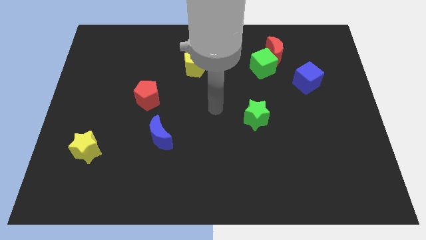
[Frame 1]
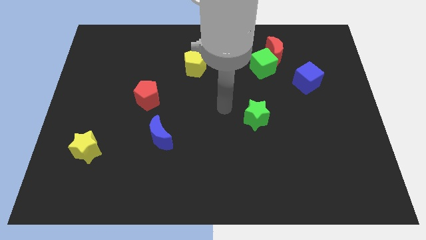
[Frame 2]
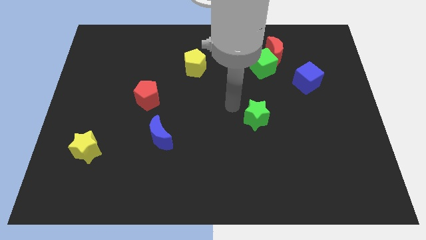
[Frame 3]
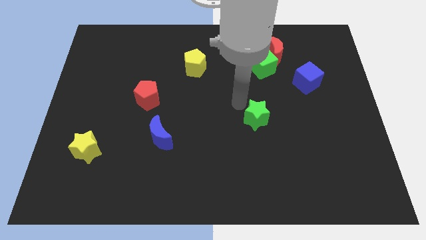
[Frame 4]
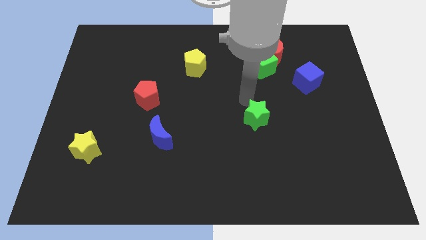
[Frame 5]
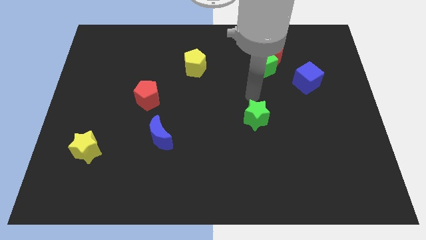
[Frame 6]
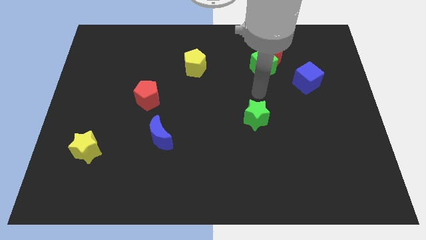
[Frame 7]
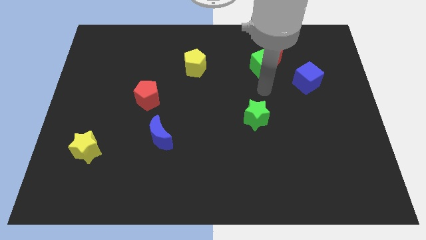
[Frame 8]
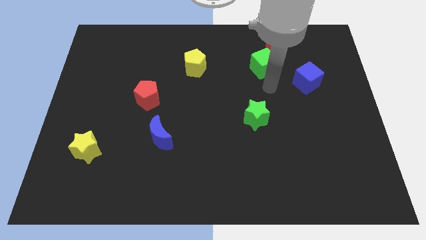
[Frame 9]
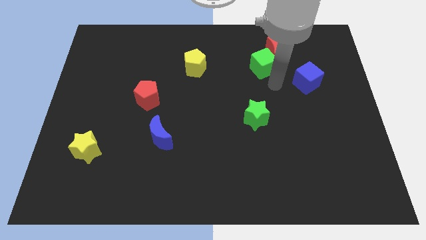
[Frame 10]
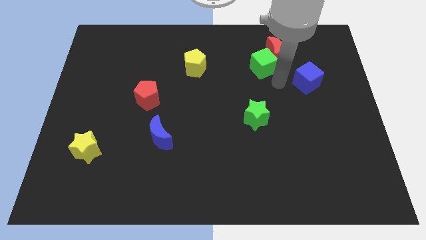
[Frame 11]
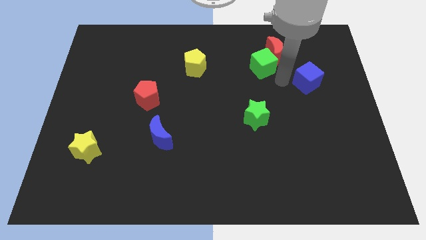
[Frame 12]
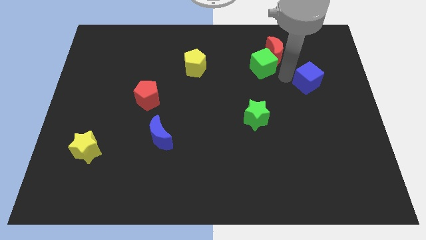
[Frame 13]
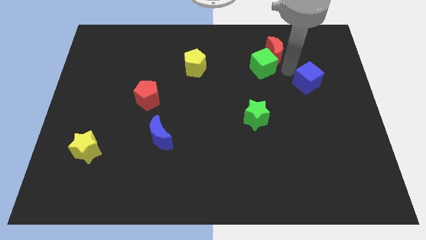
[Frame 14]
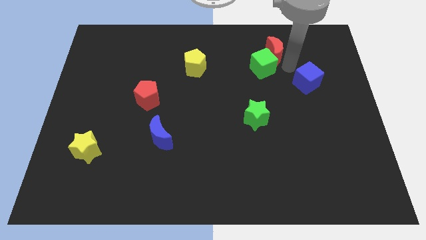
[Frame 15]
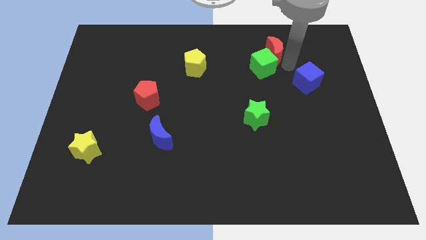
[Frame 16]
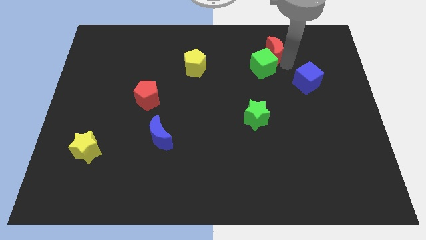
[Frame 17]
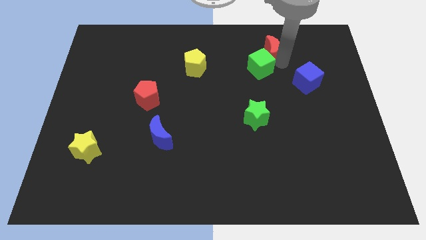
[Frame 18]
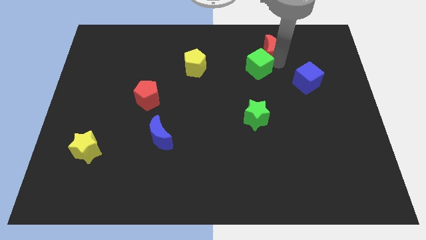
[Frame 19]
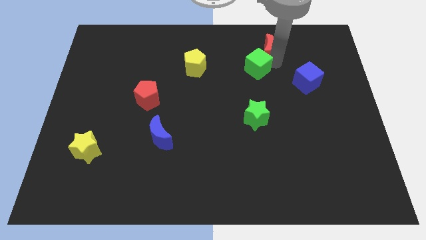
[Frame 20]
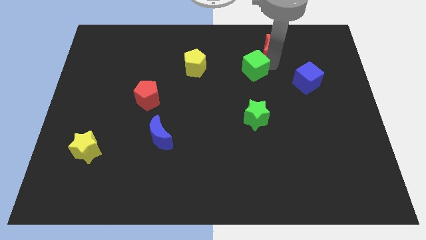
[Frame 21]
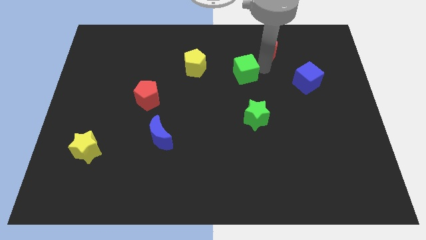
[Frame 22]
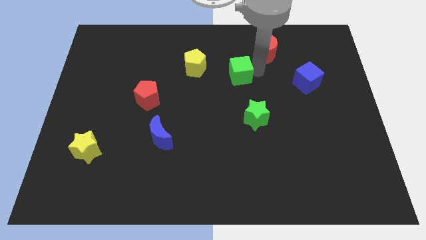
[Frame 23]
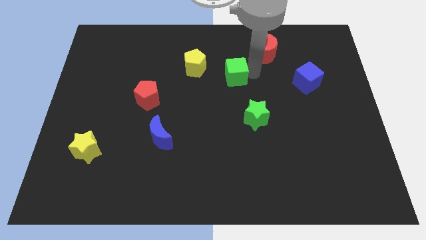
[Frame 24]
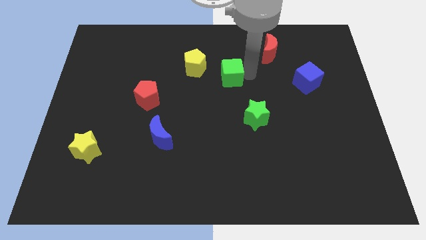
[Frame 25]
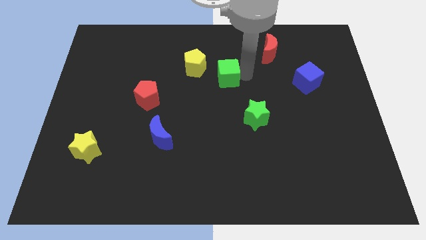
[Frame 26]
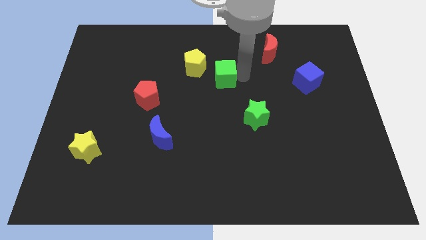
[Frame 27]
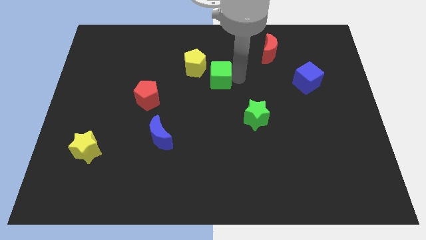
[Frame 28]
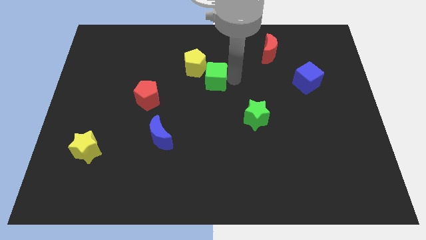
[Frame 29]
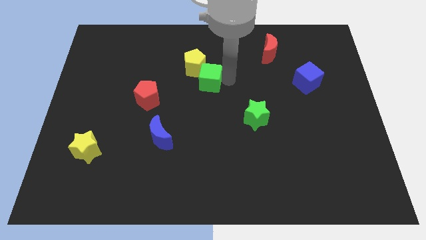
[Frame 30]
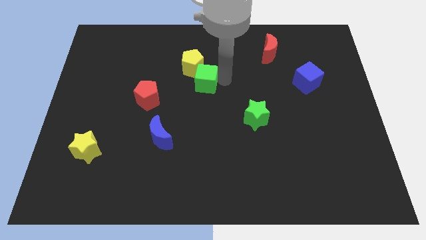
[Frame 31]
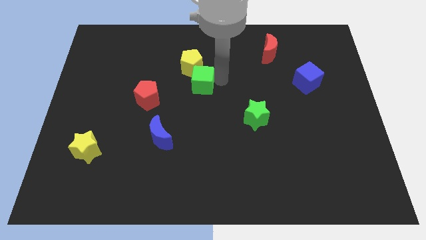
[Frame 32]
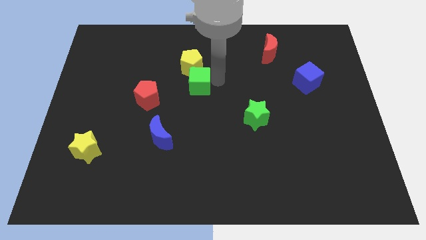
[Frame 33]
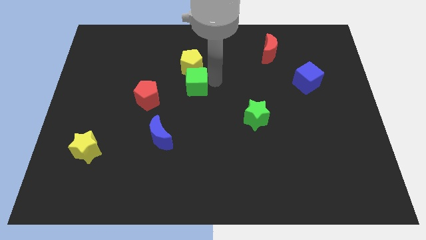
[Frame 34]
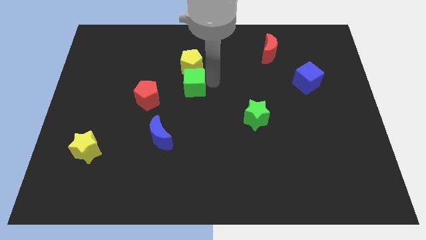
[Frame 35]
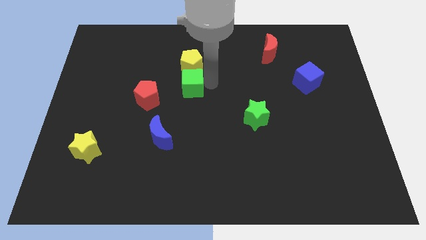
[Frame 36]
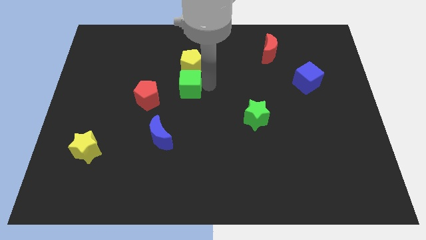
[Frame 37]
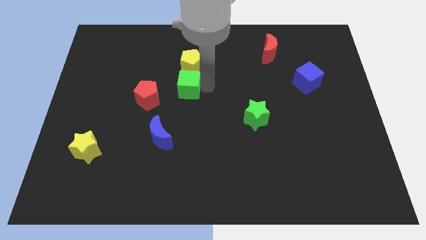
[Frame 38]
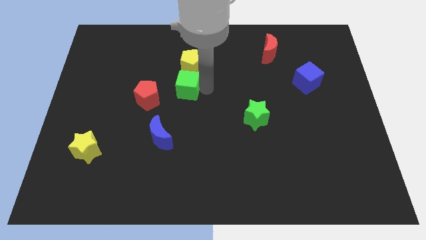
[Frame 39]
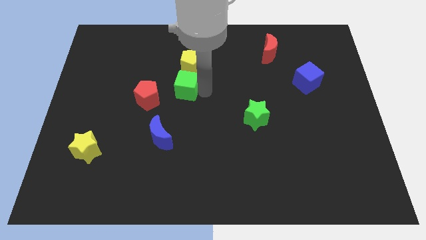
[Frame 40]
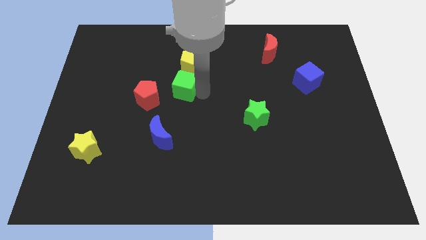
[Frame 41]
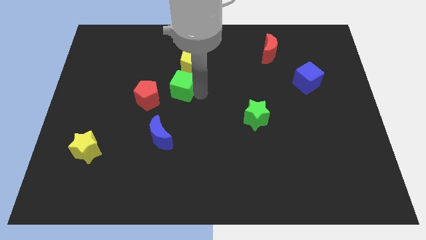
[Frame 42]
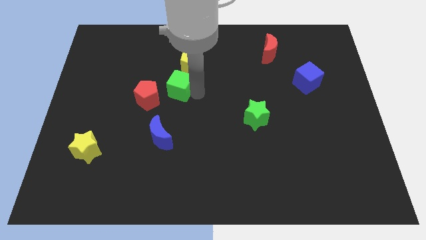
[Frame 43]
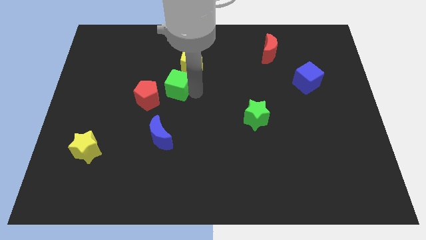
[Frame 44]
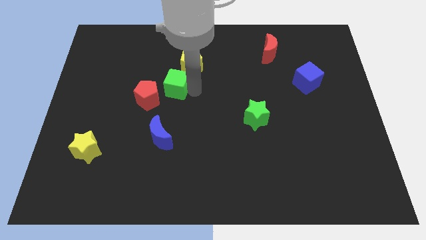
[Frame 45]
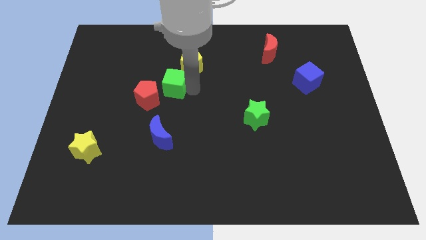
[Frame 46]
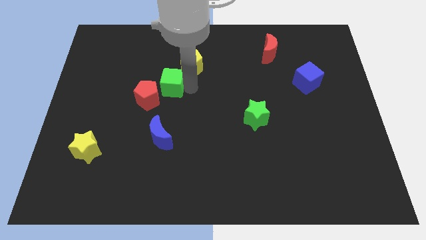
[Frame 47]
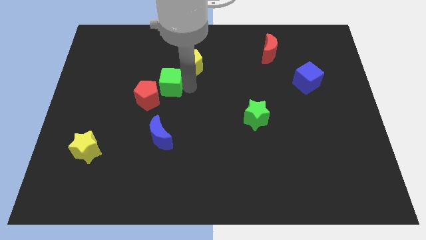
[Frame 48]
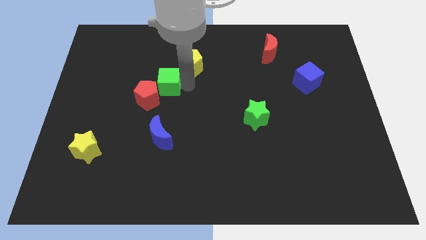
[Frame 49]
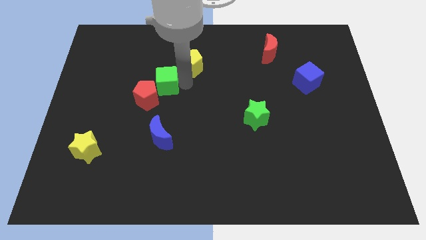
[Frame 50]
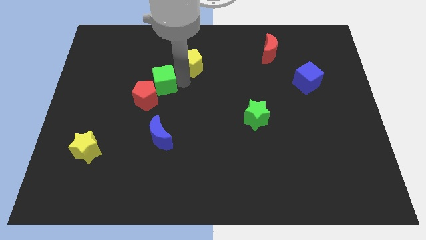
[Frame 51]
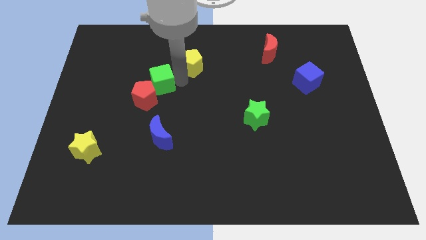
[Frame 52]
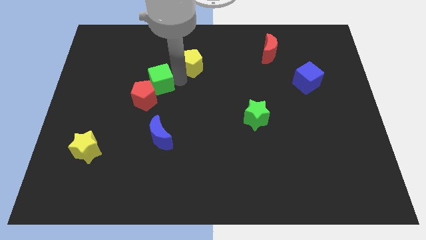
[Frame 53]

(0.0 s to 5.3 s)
put the green cube to the red pentagon

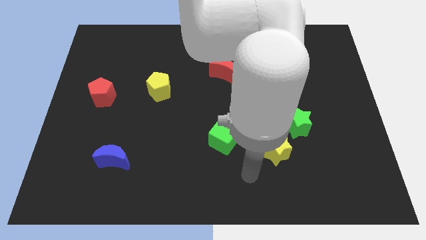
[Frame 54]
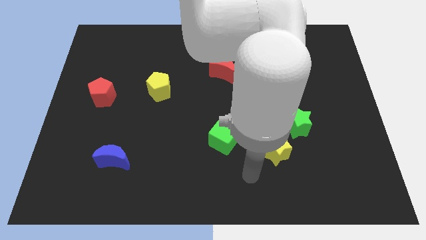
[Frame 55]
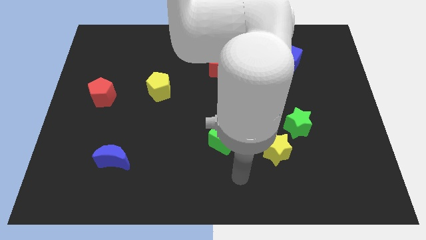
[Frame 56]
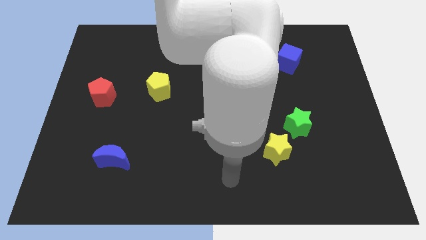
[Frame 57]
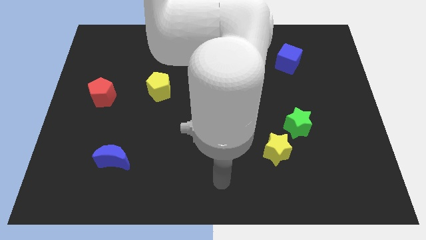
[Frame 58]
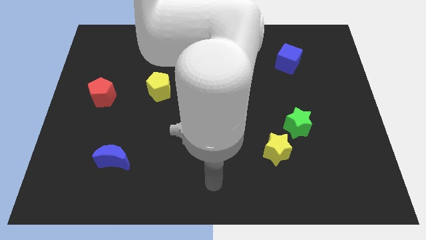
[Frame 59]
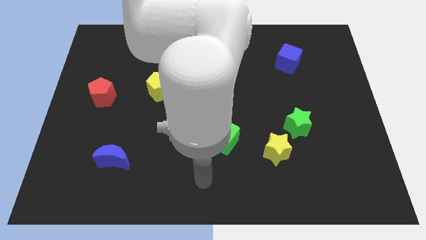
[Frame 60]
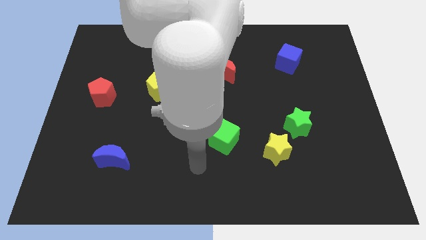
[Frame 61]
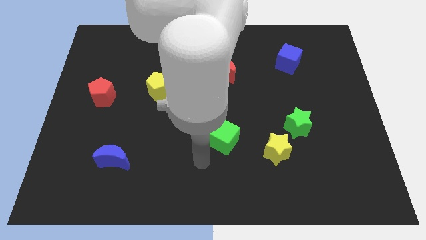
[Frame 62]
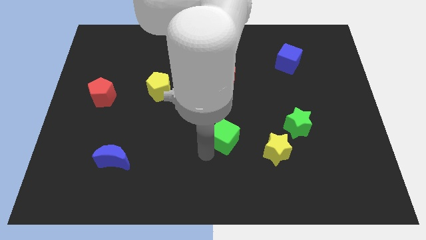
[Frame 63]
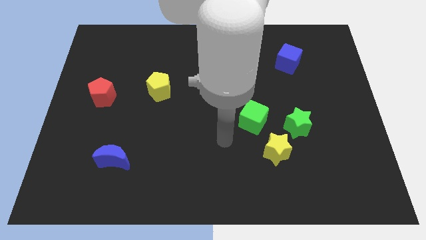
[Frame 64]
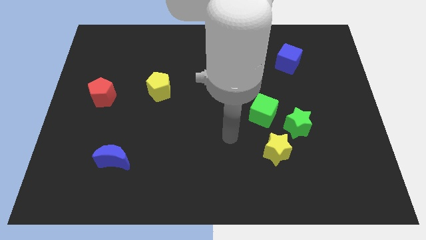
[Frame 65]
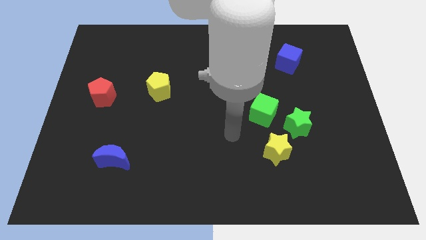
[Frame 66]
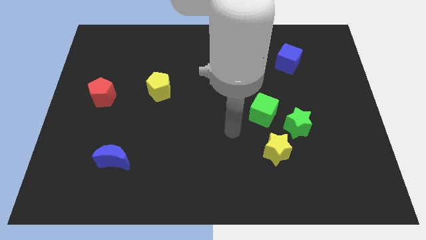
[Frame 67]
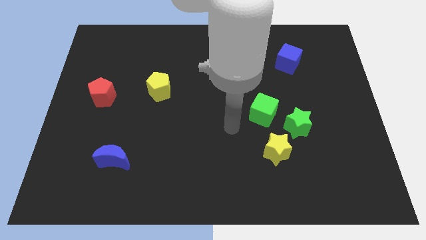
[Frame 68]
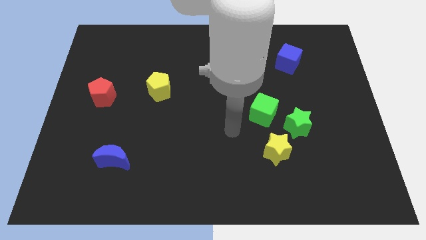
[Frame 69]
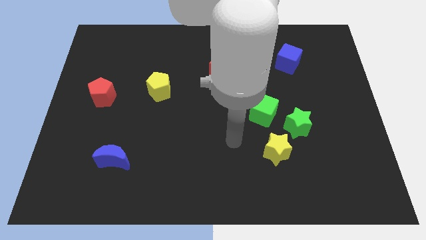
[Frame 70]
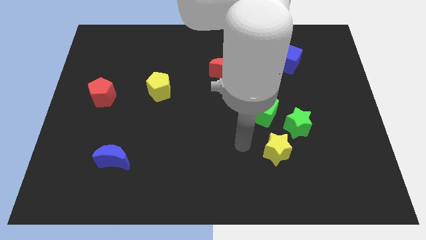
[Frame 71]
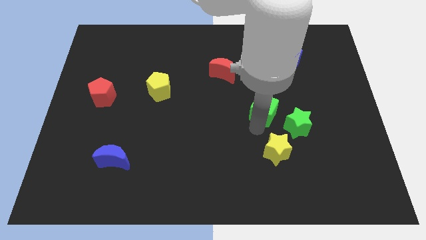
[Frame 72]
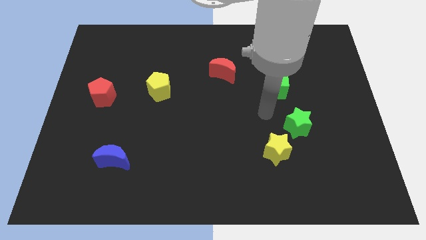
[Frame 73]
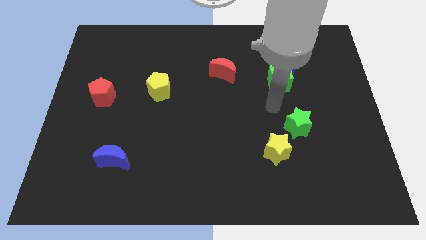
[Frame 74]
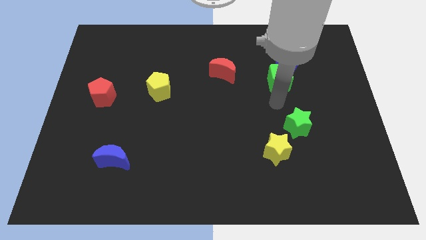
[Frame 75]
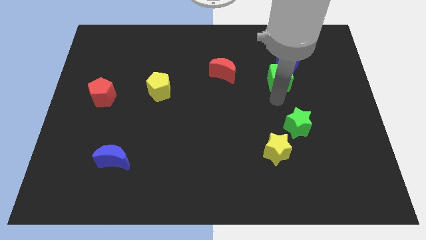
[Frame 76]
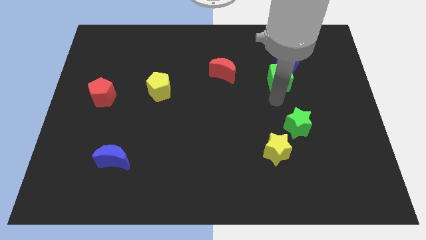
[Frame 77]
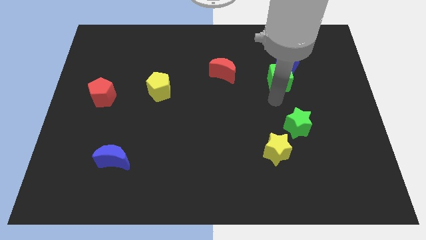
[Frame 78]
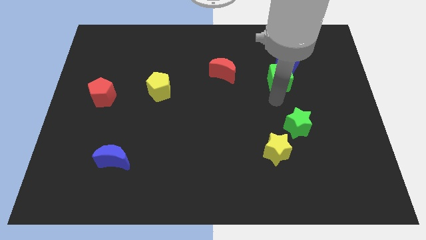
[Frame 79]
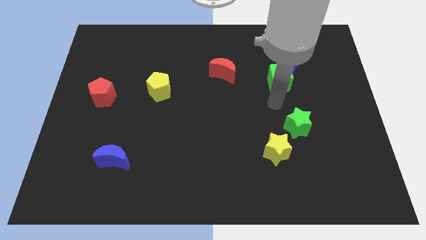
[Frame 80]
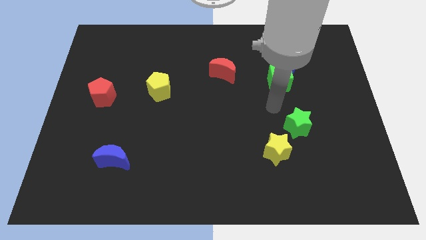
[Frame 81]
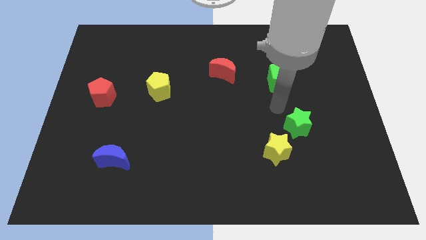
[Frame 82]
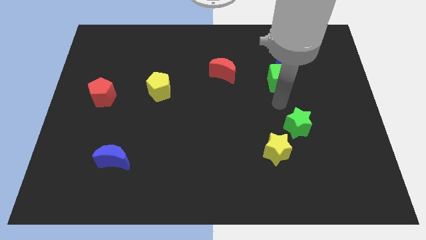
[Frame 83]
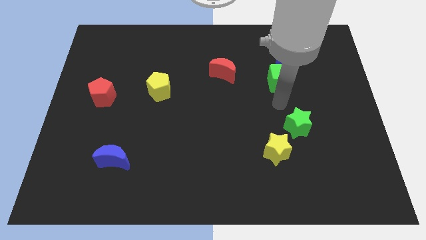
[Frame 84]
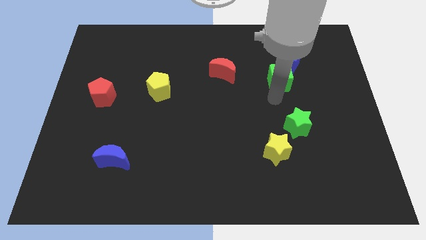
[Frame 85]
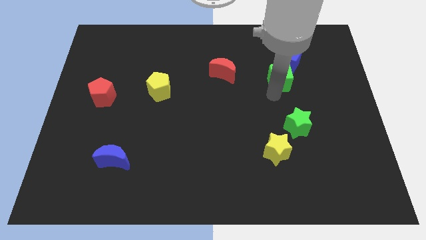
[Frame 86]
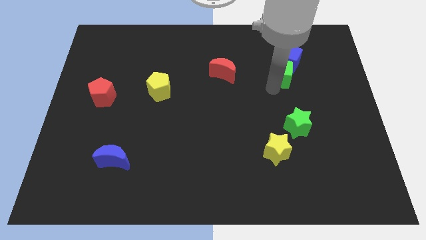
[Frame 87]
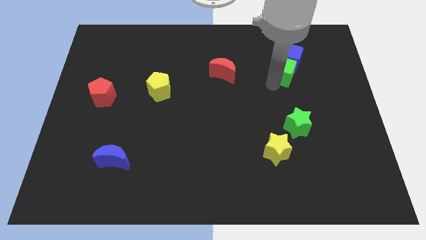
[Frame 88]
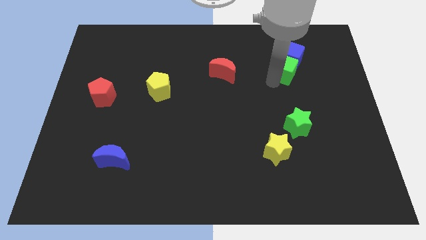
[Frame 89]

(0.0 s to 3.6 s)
push the green cube close to the blue cube
